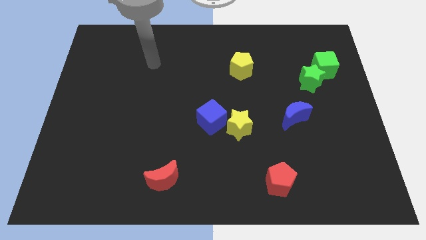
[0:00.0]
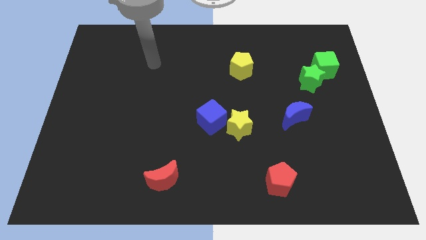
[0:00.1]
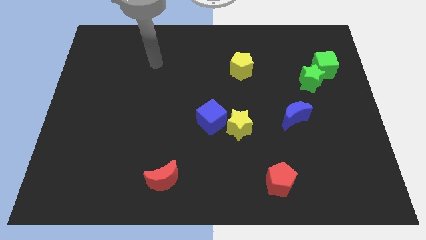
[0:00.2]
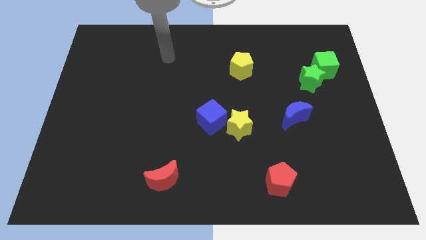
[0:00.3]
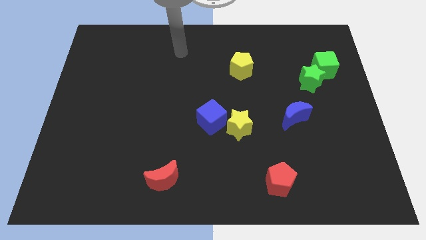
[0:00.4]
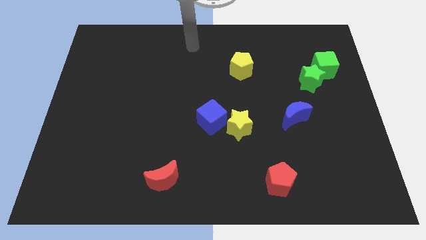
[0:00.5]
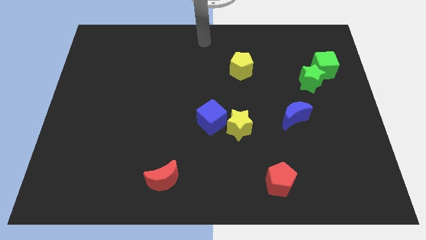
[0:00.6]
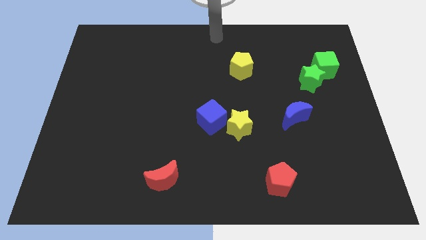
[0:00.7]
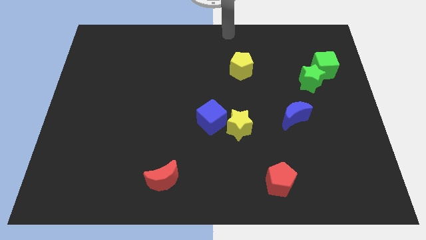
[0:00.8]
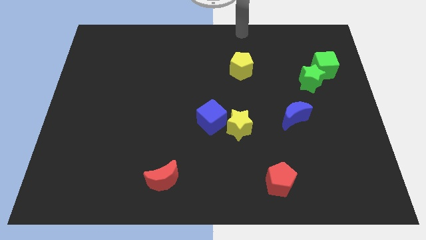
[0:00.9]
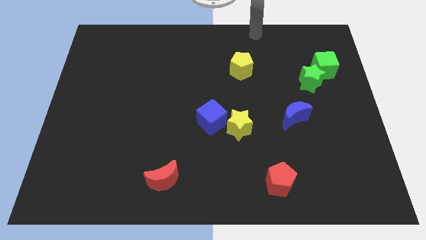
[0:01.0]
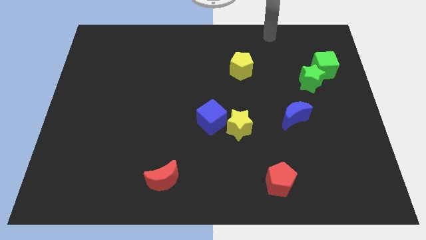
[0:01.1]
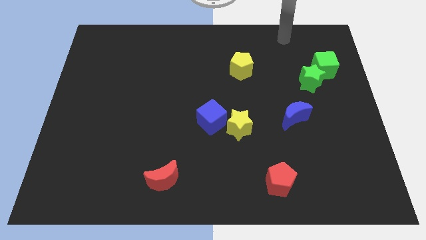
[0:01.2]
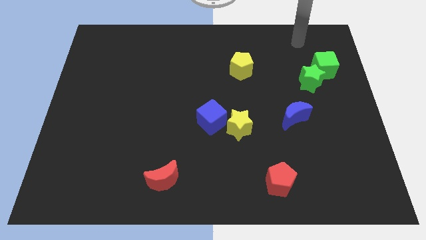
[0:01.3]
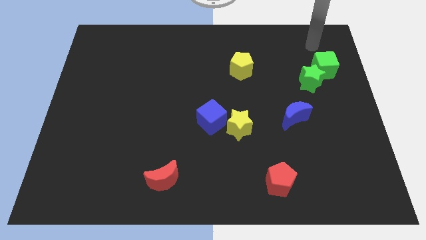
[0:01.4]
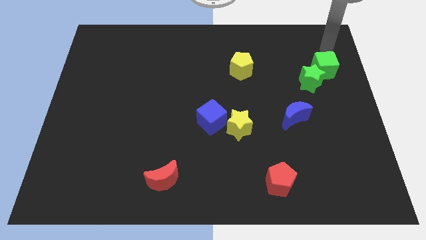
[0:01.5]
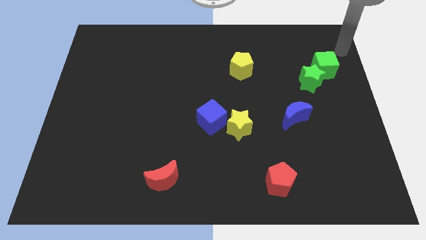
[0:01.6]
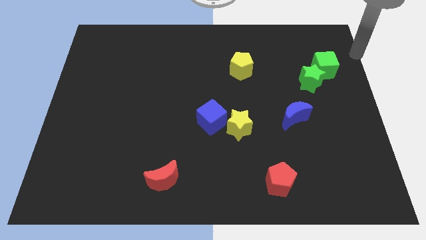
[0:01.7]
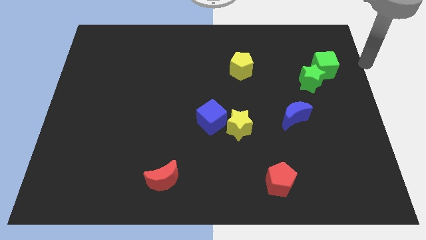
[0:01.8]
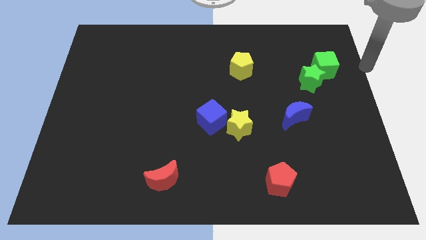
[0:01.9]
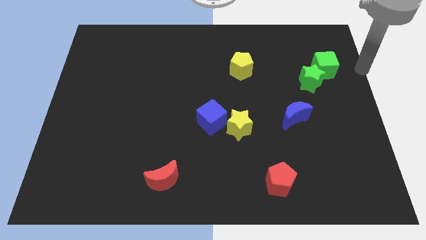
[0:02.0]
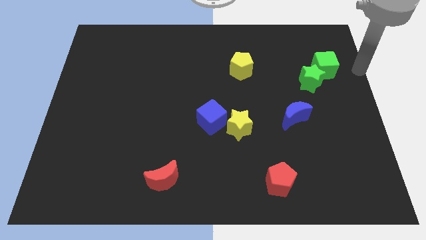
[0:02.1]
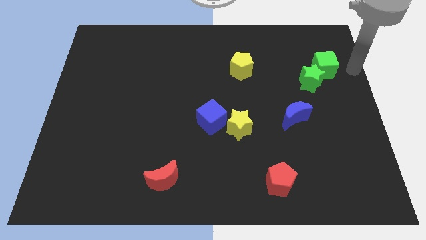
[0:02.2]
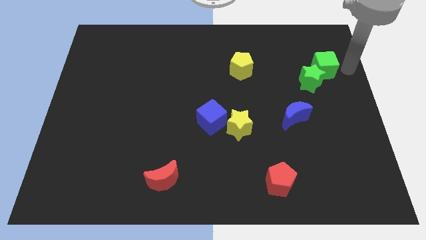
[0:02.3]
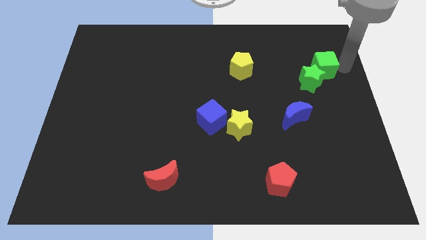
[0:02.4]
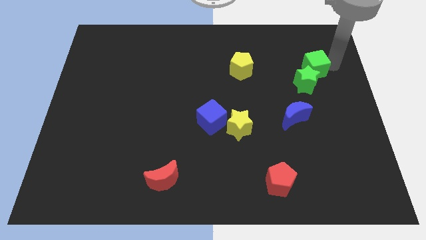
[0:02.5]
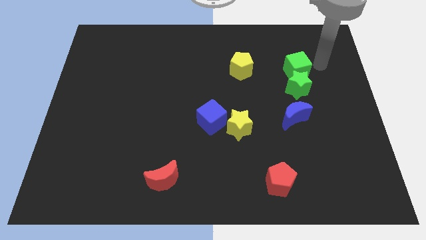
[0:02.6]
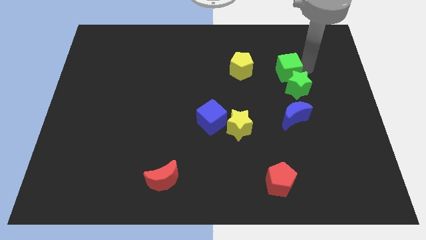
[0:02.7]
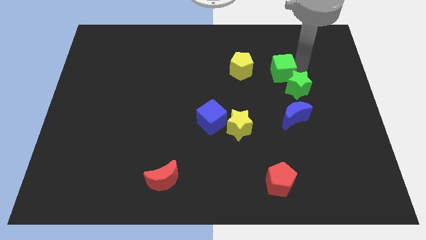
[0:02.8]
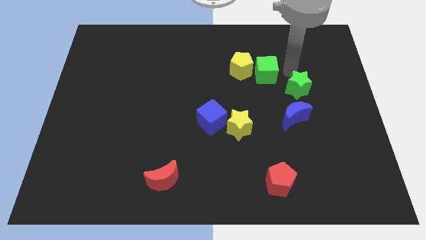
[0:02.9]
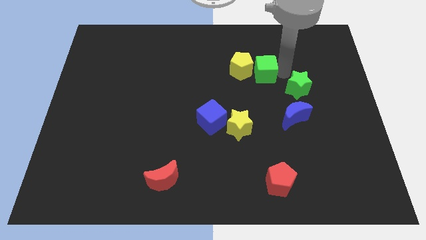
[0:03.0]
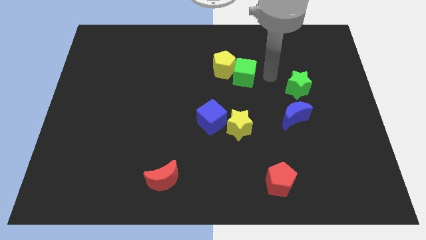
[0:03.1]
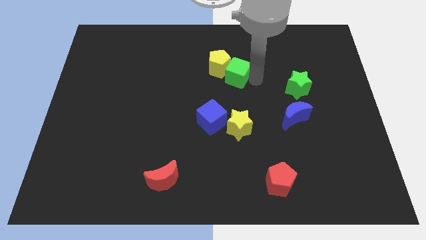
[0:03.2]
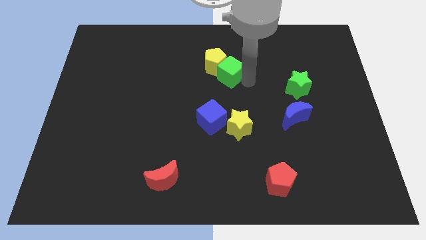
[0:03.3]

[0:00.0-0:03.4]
push the green cube into the yellow pentagon

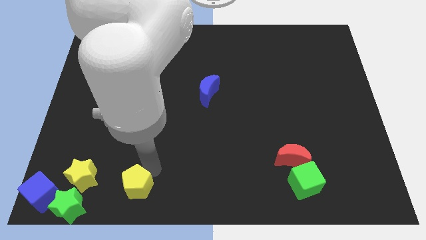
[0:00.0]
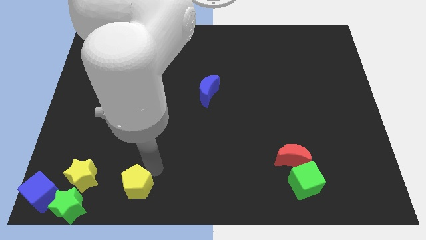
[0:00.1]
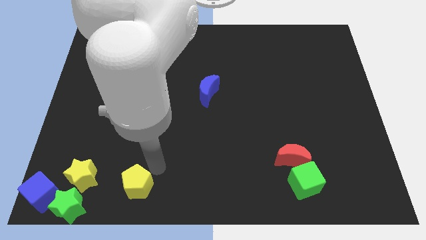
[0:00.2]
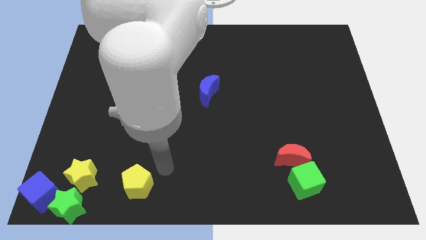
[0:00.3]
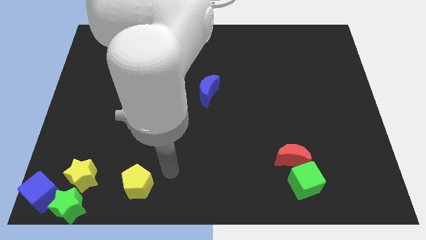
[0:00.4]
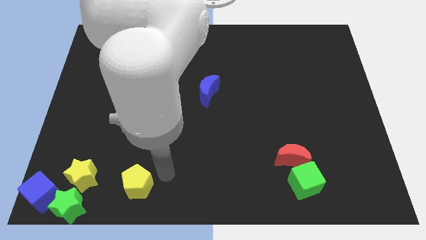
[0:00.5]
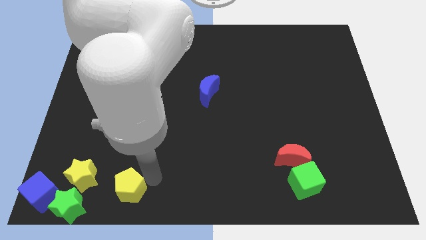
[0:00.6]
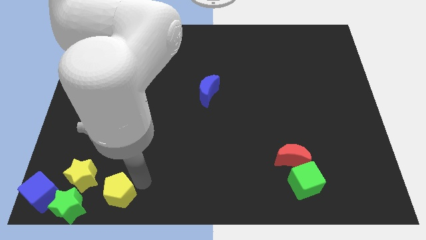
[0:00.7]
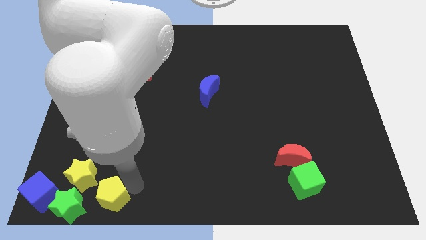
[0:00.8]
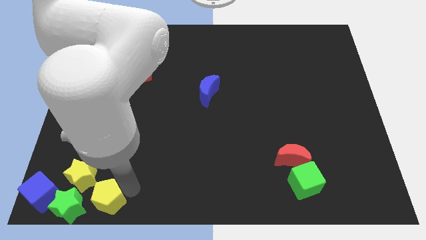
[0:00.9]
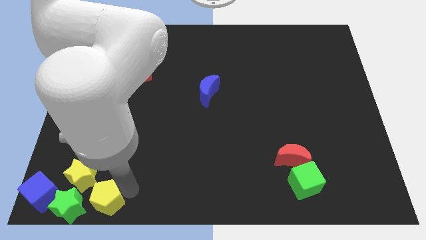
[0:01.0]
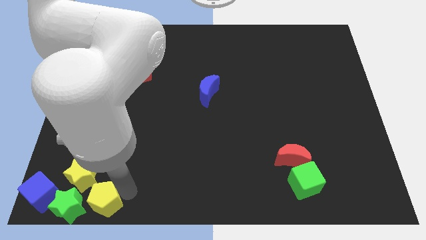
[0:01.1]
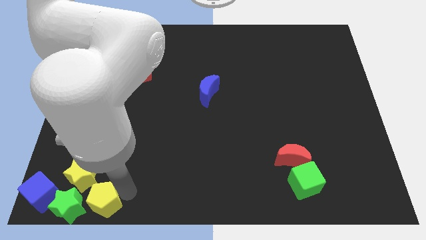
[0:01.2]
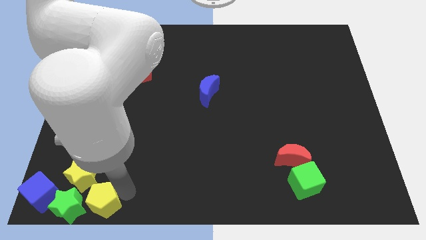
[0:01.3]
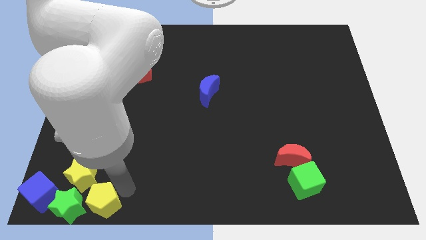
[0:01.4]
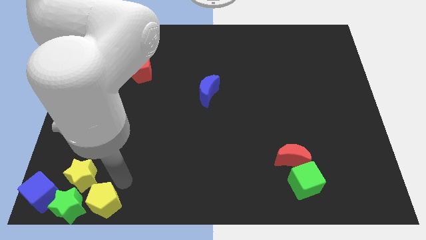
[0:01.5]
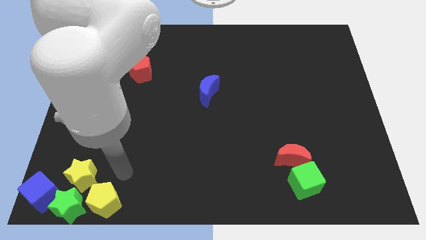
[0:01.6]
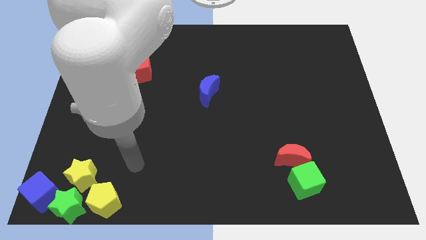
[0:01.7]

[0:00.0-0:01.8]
place the yellow pentagon right to the green star

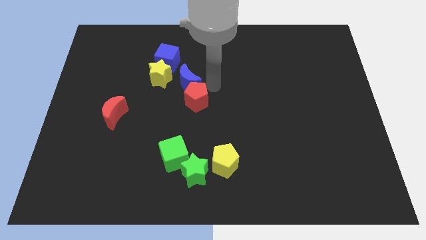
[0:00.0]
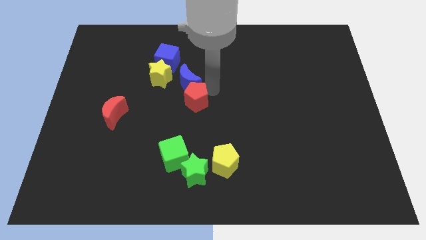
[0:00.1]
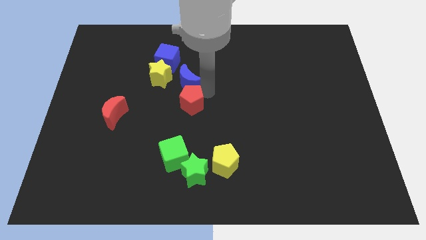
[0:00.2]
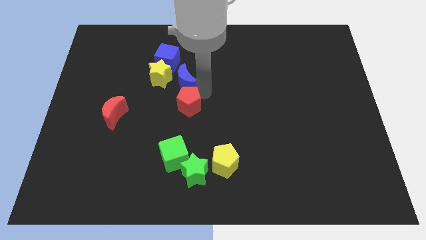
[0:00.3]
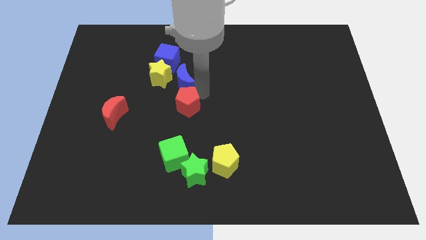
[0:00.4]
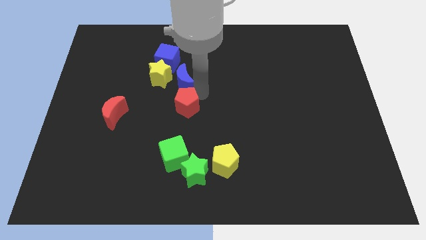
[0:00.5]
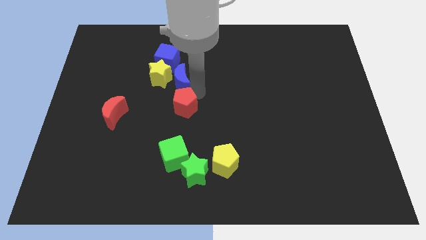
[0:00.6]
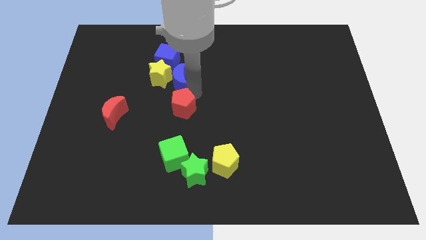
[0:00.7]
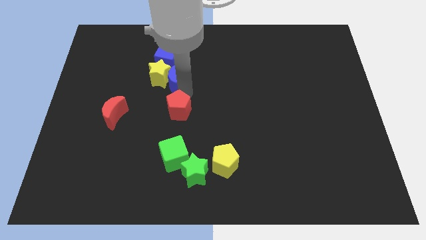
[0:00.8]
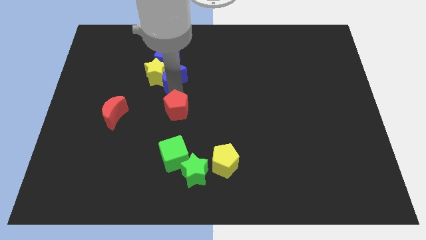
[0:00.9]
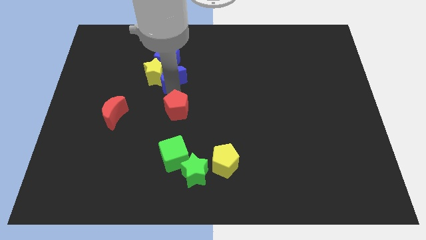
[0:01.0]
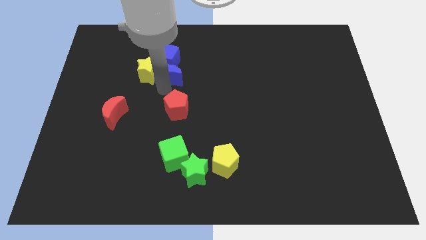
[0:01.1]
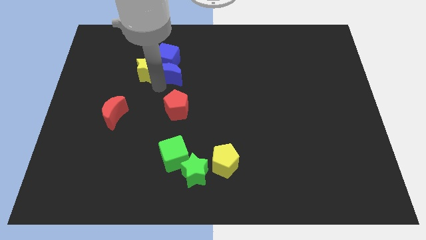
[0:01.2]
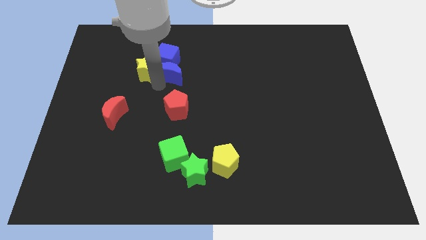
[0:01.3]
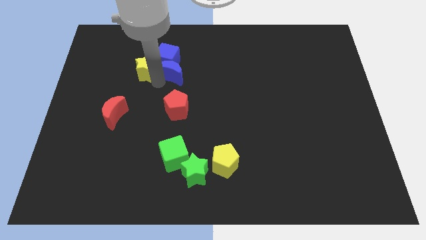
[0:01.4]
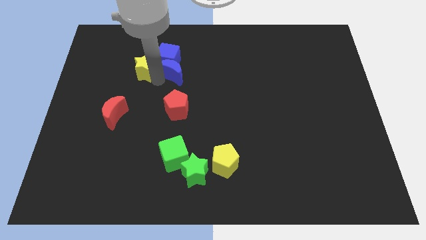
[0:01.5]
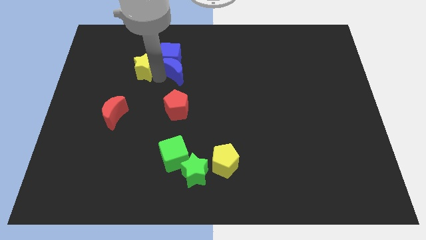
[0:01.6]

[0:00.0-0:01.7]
separate red pentagon and blue moon

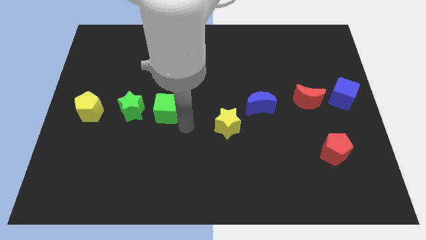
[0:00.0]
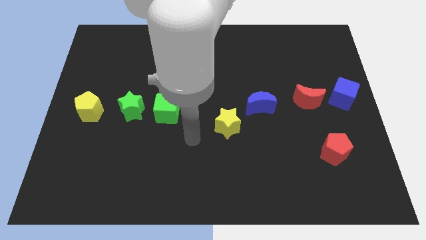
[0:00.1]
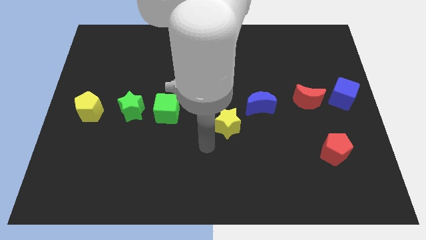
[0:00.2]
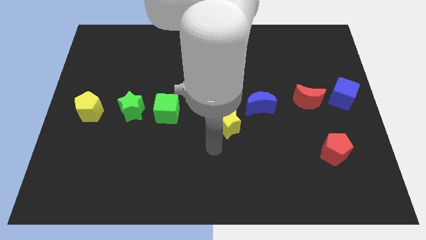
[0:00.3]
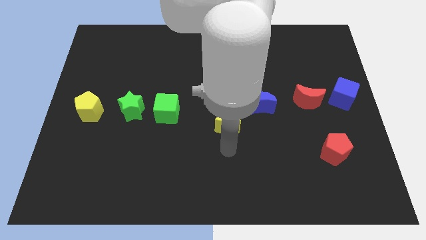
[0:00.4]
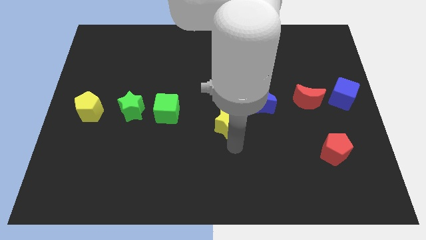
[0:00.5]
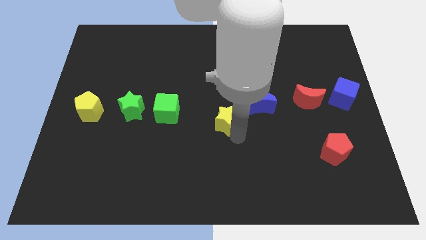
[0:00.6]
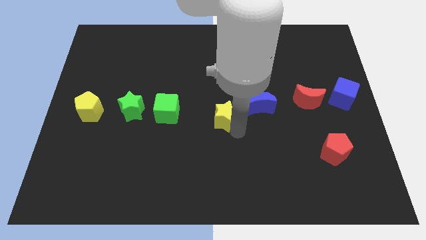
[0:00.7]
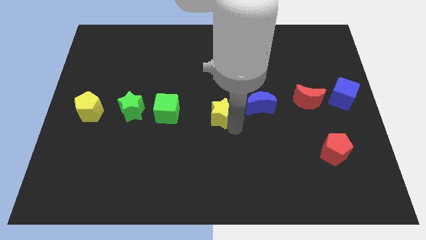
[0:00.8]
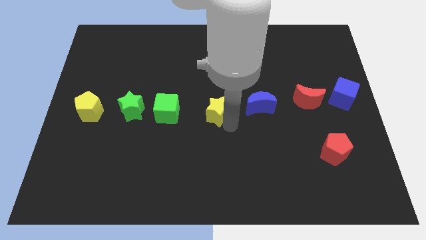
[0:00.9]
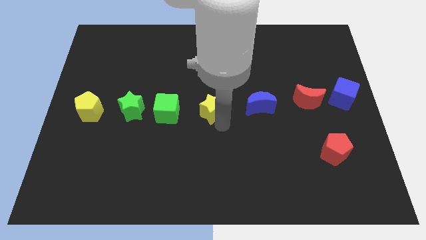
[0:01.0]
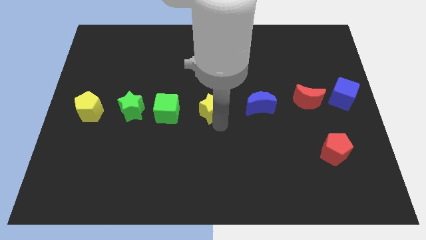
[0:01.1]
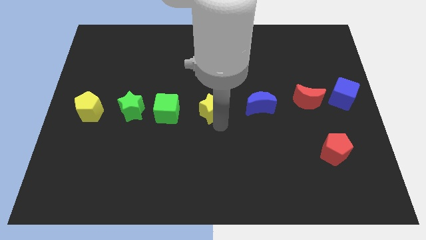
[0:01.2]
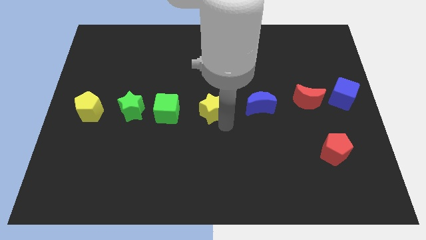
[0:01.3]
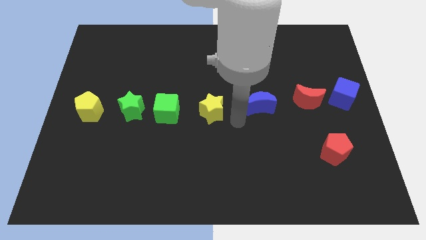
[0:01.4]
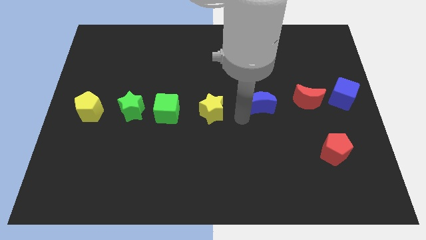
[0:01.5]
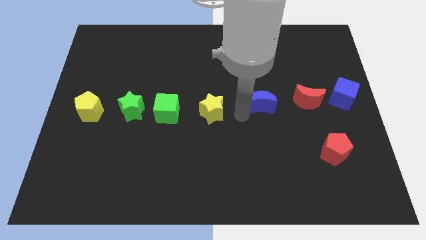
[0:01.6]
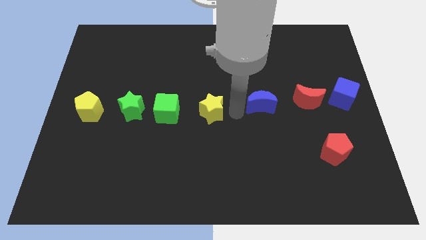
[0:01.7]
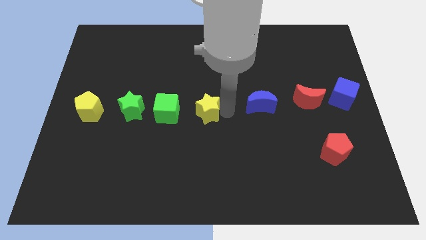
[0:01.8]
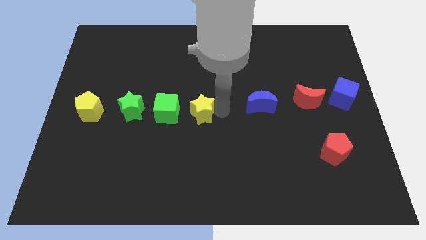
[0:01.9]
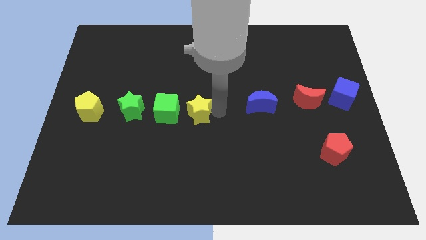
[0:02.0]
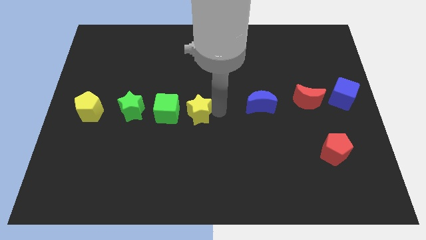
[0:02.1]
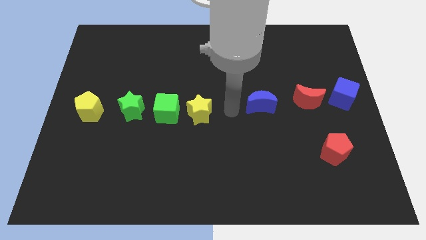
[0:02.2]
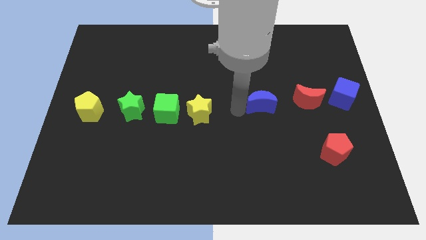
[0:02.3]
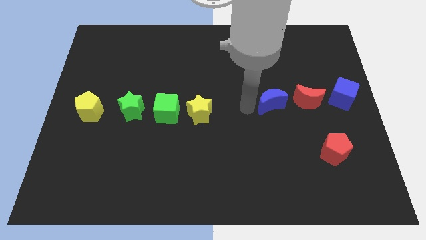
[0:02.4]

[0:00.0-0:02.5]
place the yellow star to the right of the green cube
